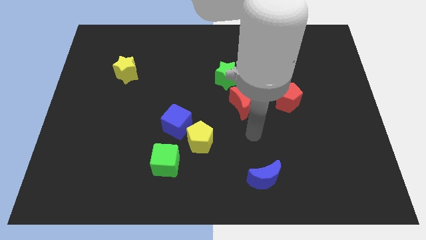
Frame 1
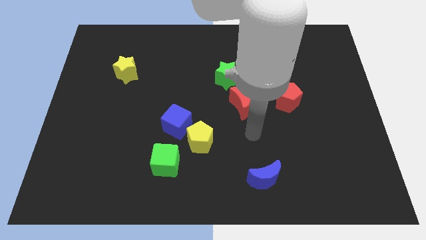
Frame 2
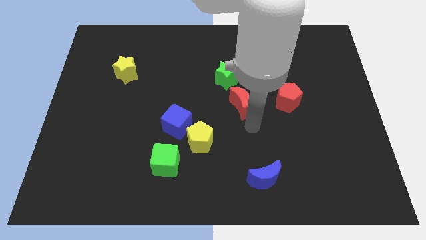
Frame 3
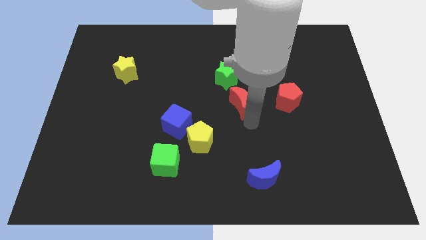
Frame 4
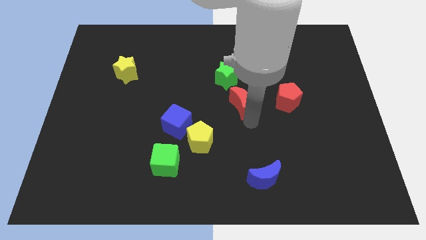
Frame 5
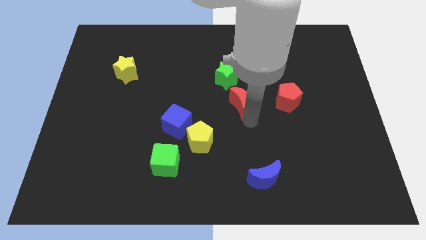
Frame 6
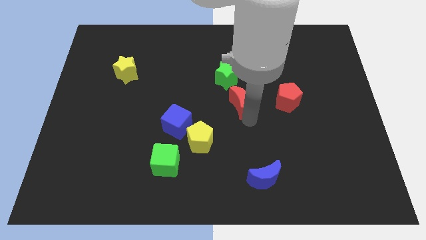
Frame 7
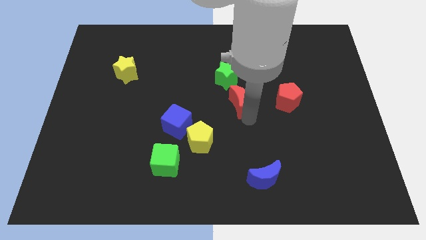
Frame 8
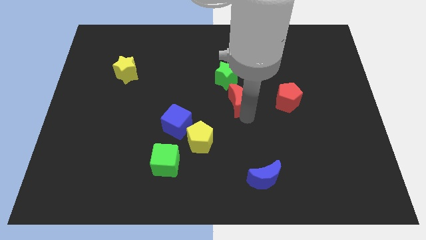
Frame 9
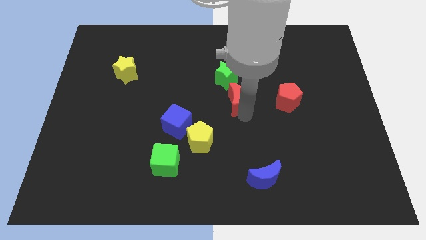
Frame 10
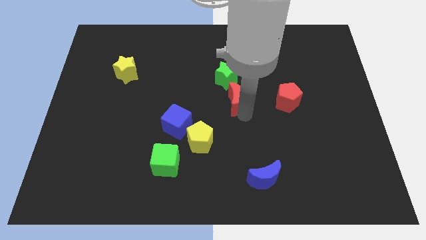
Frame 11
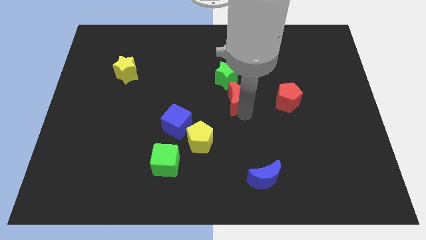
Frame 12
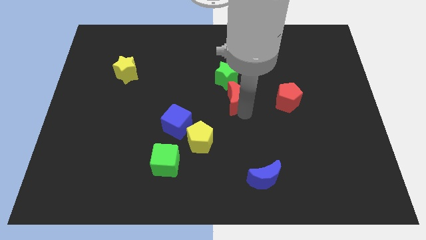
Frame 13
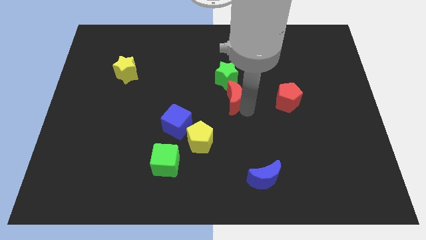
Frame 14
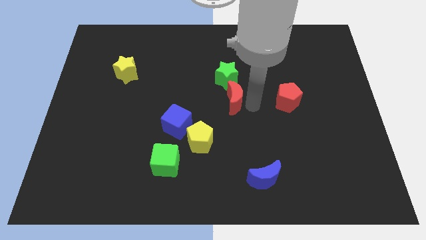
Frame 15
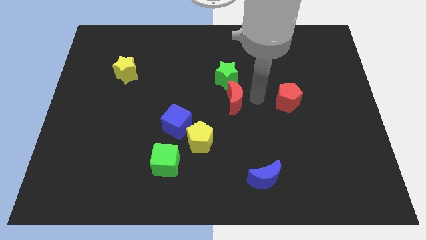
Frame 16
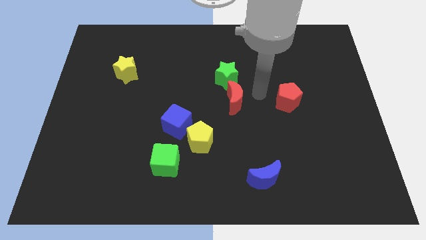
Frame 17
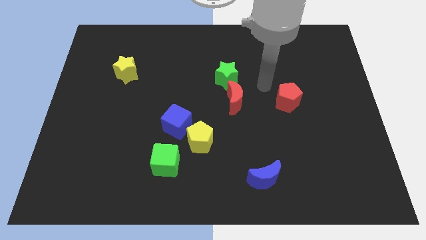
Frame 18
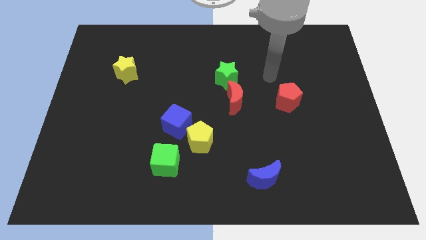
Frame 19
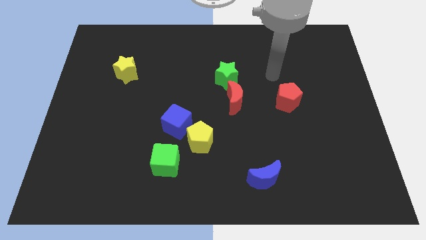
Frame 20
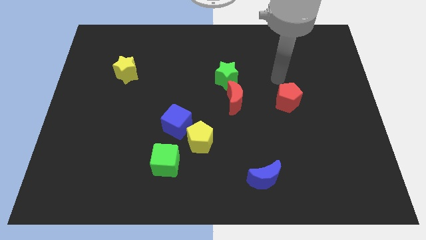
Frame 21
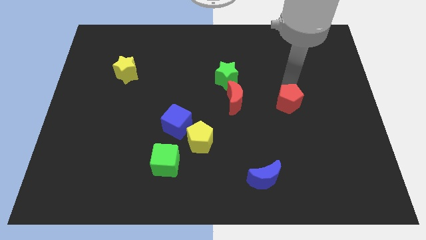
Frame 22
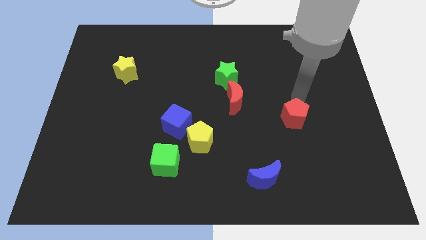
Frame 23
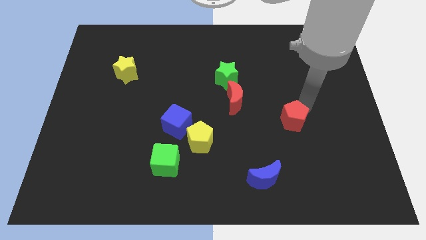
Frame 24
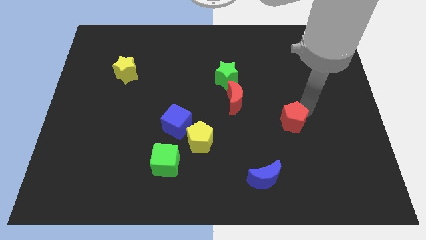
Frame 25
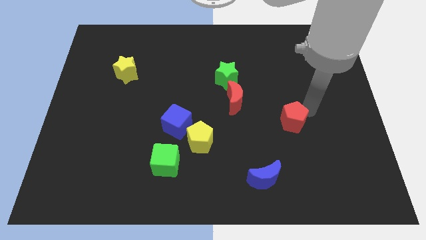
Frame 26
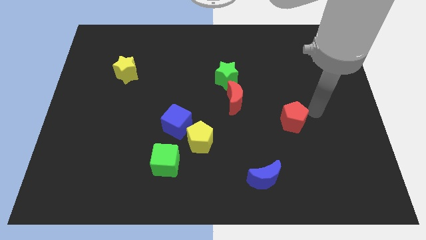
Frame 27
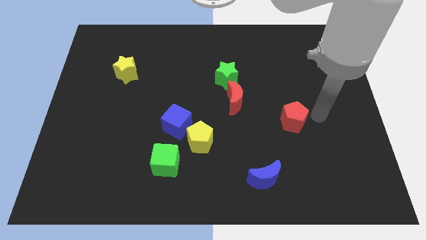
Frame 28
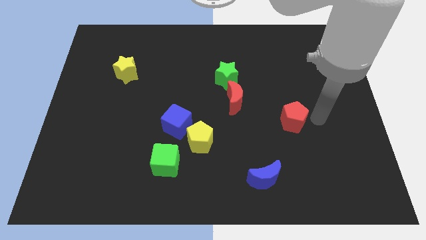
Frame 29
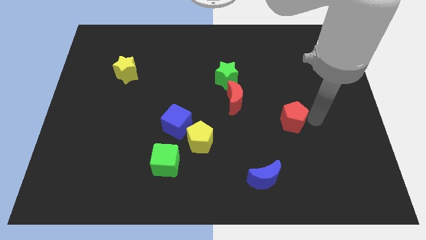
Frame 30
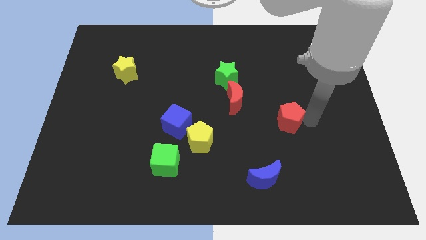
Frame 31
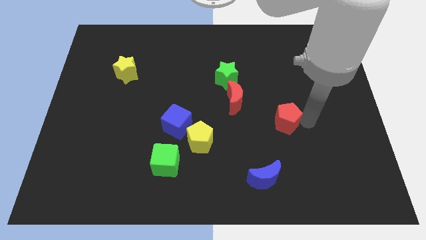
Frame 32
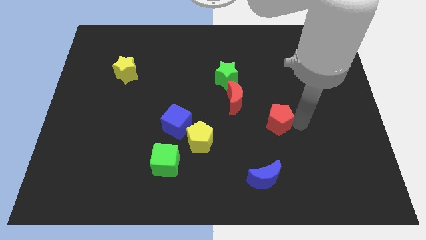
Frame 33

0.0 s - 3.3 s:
push red pentagon slightly towards down

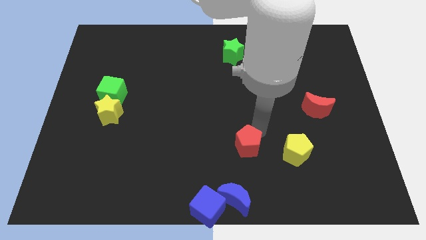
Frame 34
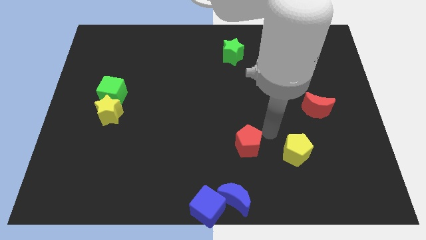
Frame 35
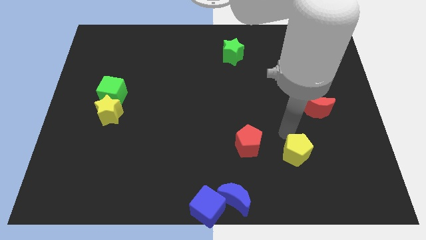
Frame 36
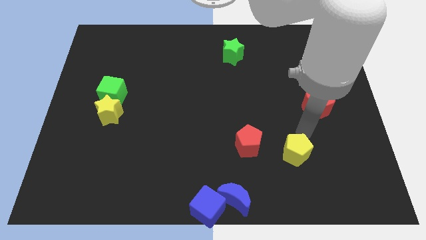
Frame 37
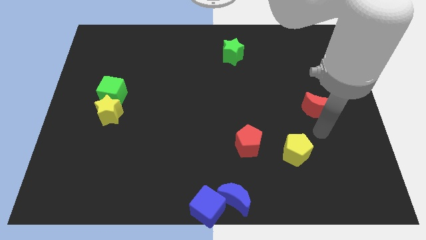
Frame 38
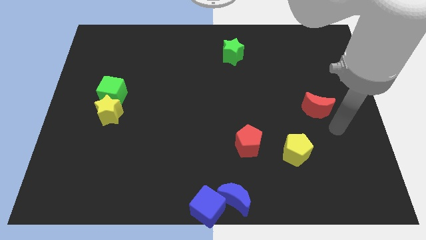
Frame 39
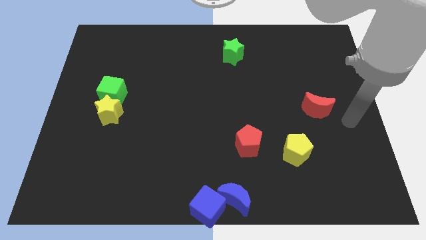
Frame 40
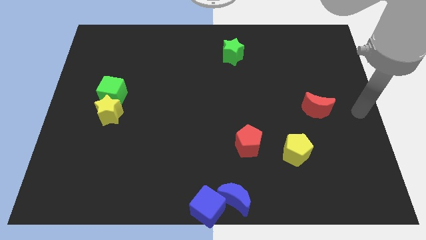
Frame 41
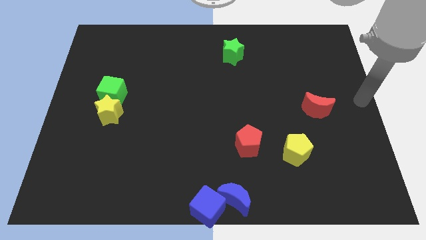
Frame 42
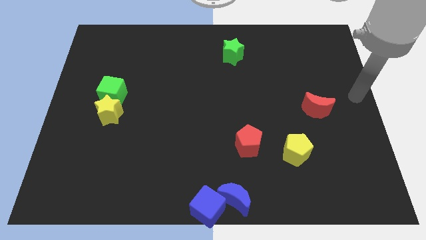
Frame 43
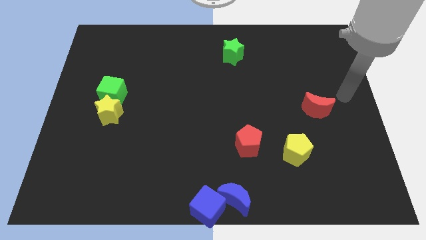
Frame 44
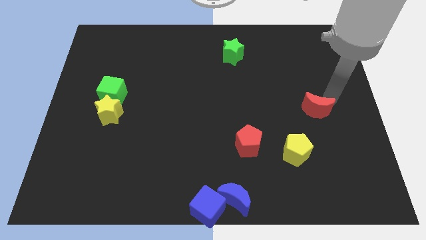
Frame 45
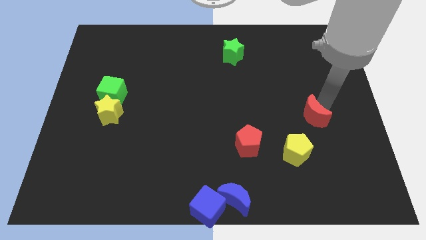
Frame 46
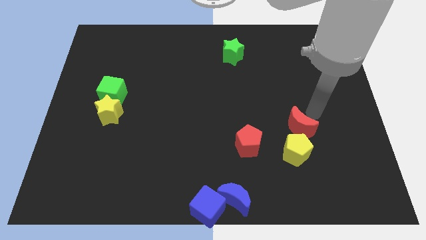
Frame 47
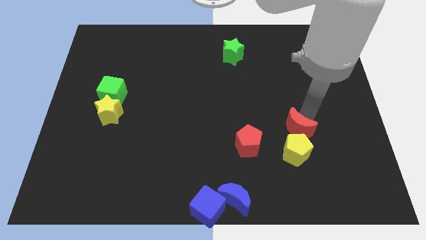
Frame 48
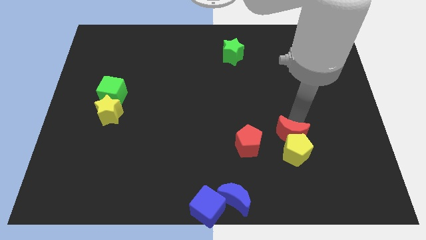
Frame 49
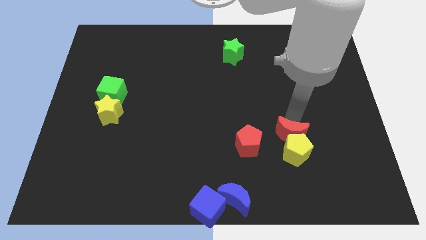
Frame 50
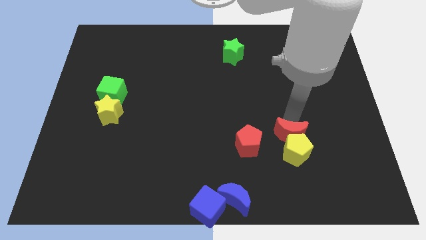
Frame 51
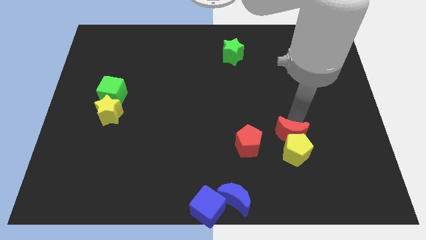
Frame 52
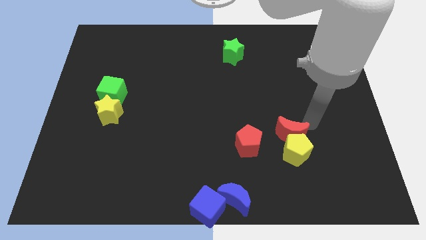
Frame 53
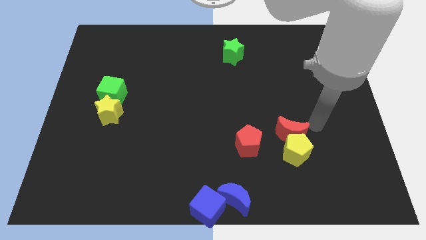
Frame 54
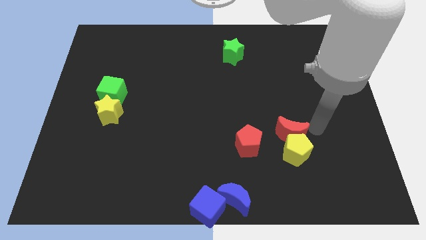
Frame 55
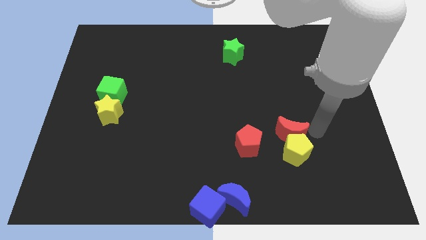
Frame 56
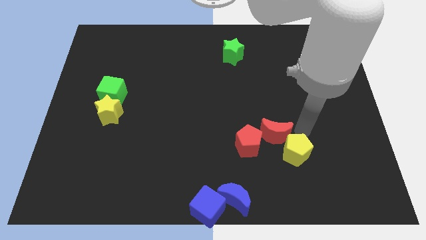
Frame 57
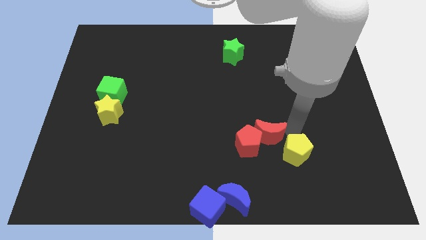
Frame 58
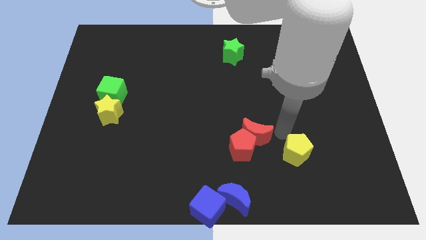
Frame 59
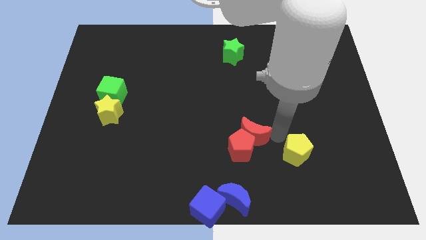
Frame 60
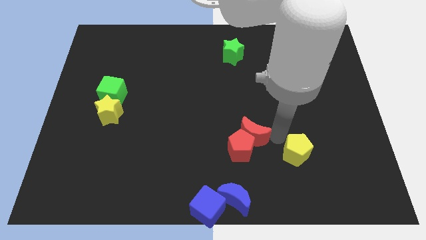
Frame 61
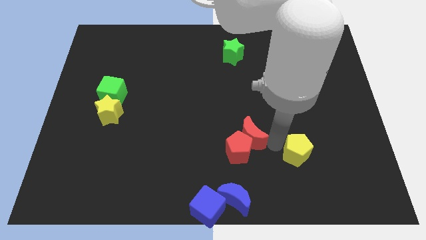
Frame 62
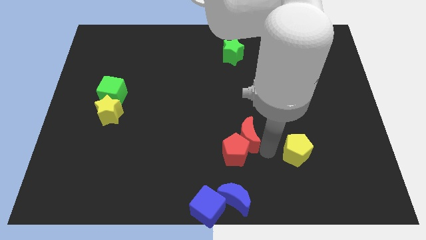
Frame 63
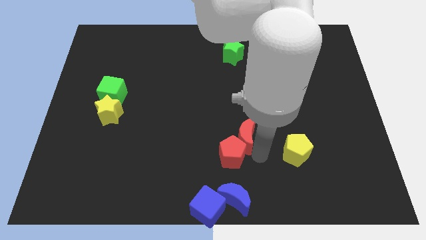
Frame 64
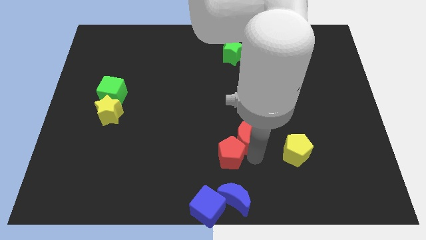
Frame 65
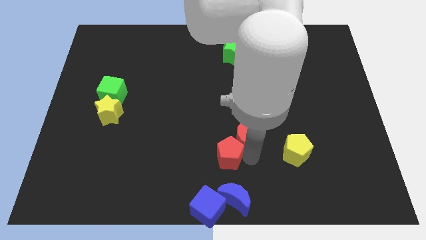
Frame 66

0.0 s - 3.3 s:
push the red crescent to the top of the red pentagon

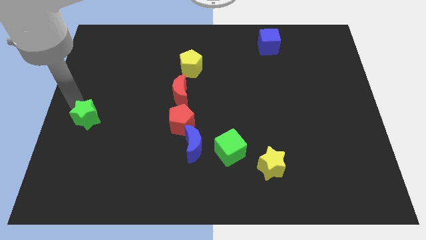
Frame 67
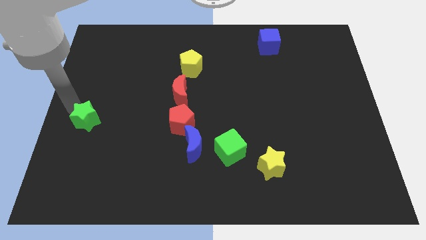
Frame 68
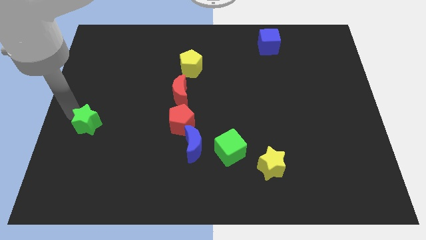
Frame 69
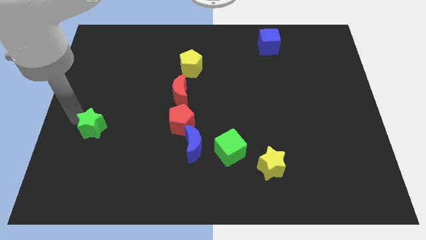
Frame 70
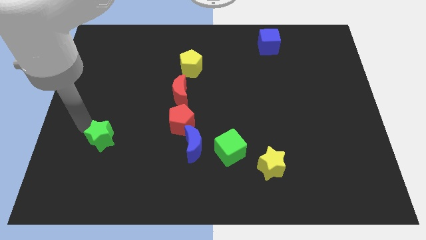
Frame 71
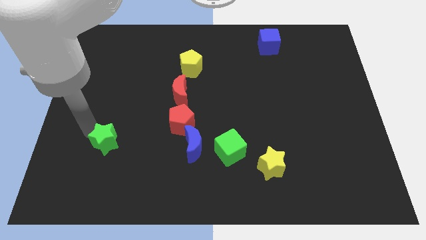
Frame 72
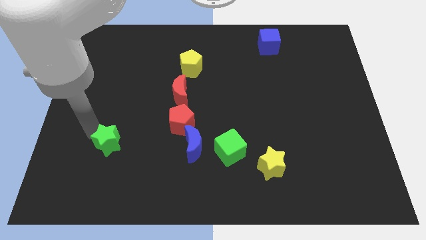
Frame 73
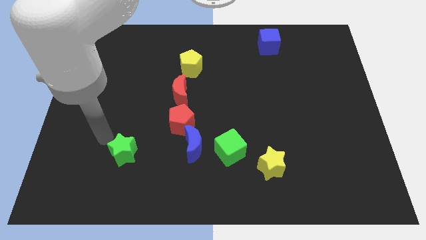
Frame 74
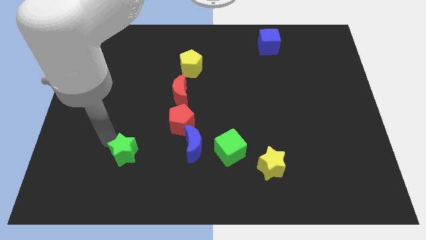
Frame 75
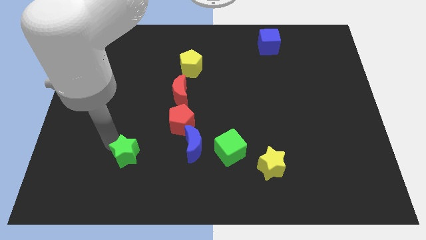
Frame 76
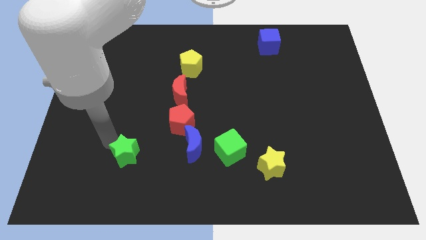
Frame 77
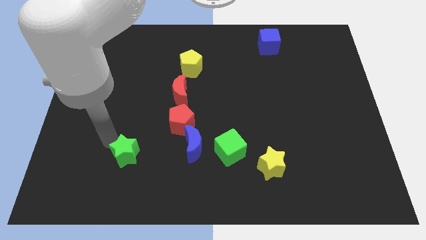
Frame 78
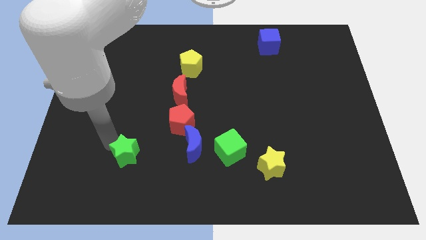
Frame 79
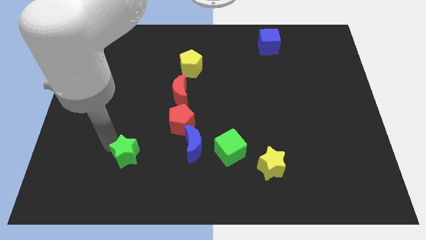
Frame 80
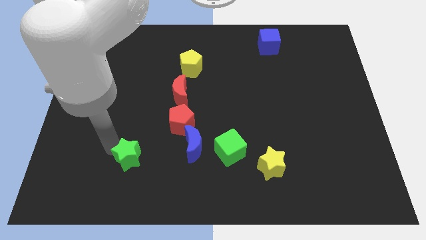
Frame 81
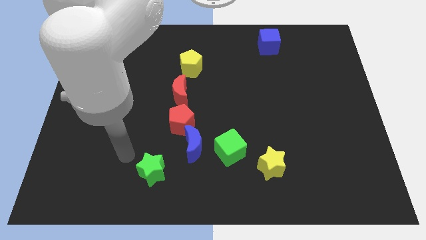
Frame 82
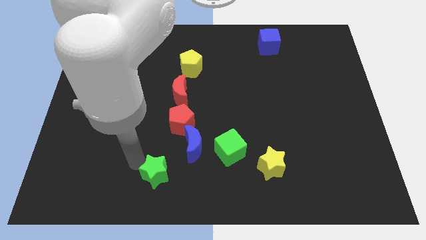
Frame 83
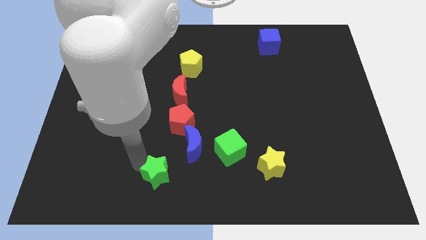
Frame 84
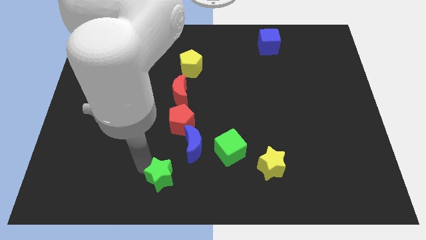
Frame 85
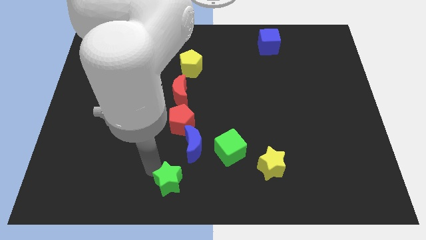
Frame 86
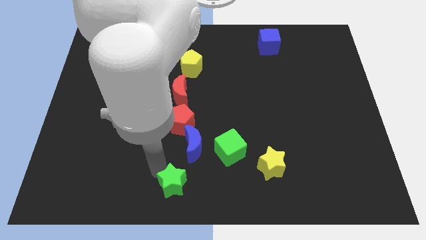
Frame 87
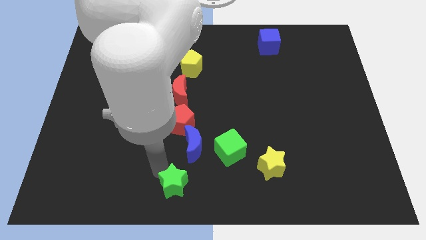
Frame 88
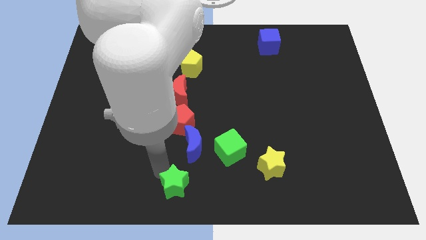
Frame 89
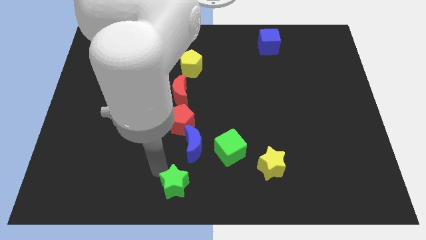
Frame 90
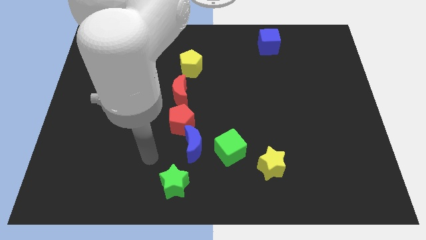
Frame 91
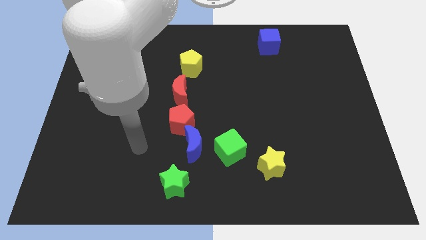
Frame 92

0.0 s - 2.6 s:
push the green star to the bottom side of the red pentagon to form a vertical line

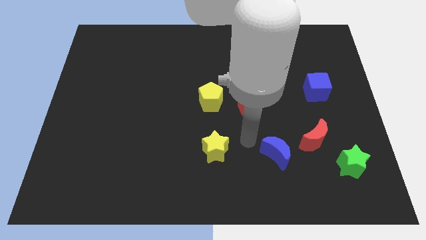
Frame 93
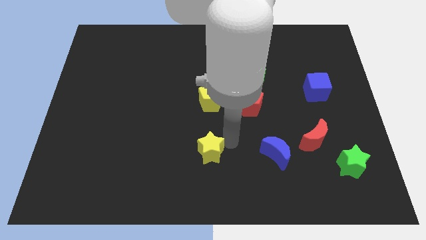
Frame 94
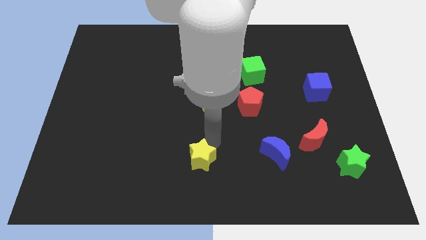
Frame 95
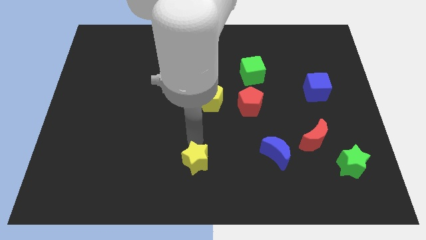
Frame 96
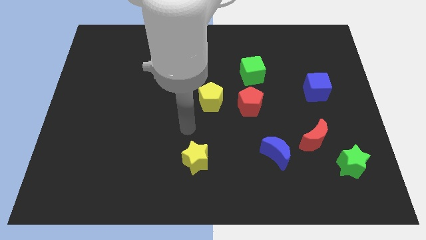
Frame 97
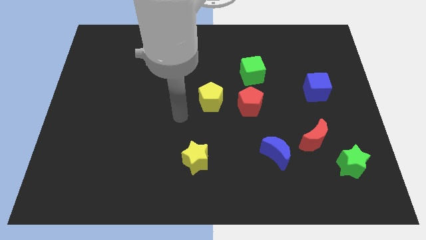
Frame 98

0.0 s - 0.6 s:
move the yellow star to the bottom center of the board
